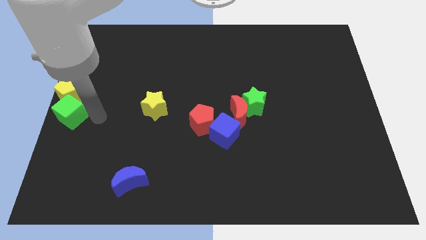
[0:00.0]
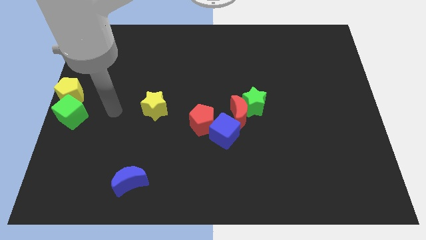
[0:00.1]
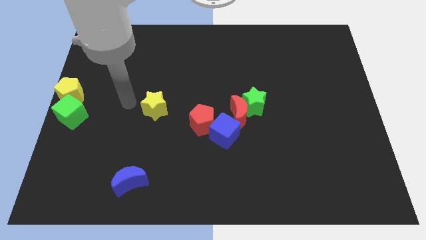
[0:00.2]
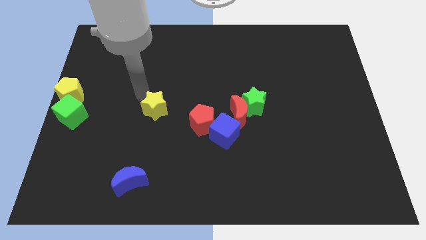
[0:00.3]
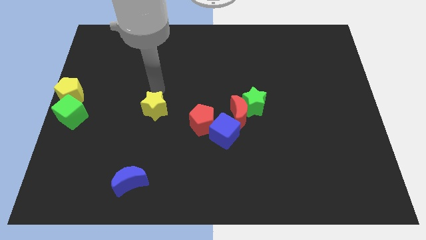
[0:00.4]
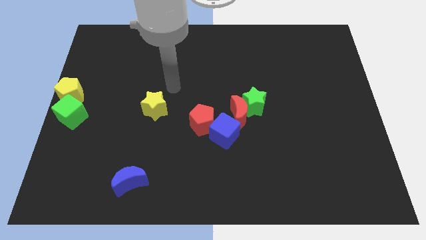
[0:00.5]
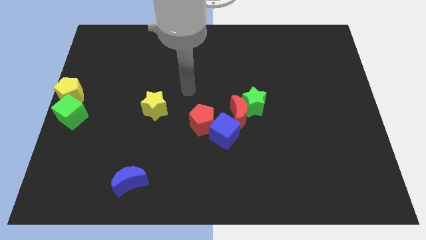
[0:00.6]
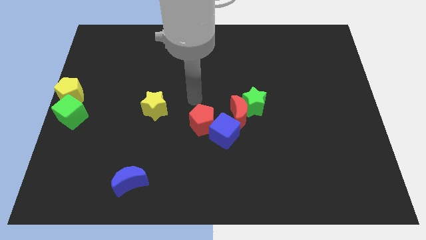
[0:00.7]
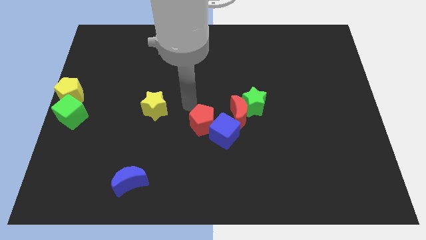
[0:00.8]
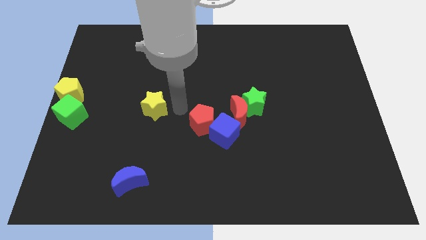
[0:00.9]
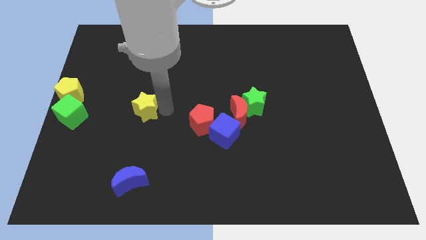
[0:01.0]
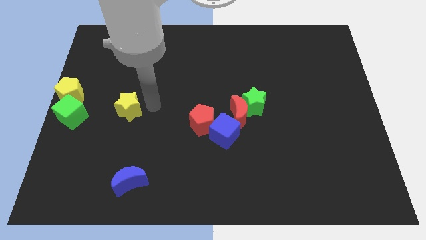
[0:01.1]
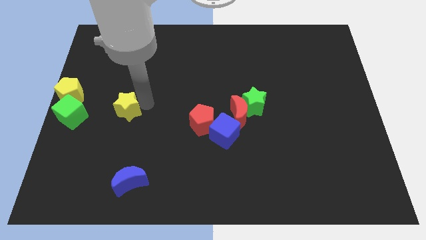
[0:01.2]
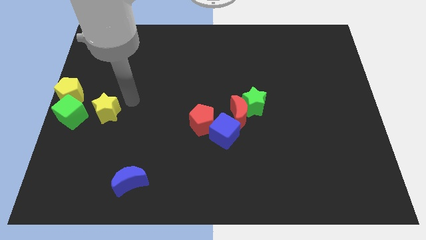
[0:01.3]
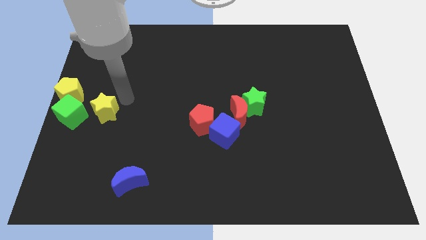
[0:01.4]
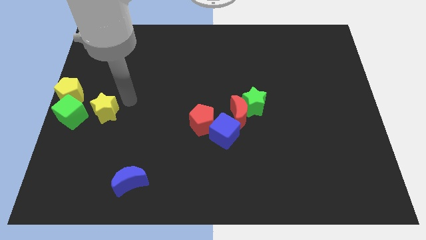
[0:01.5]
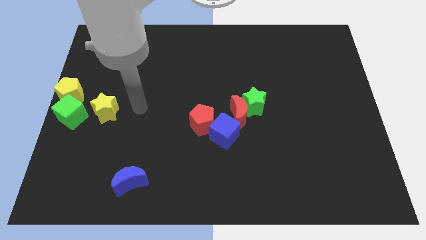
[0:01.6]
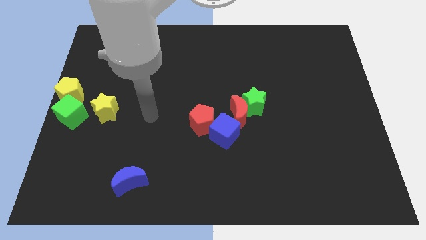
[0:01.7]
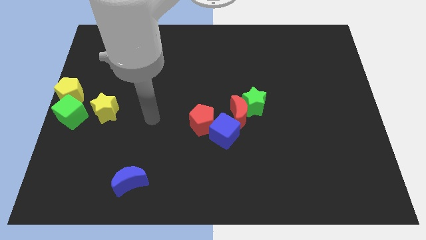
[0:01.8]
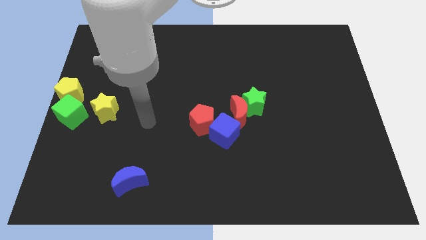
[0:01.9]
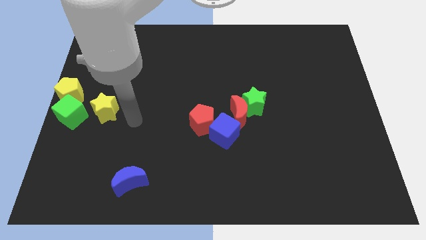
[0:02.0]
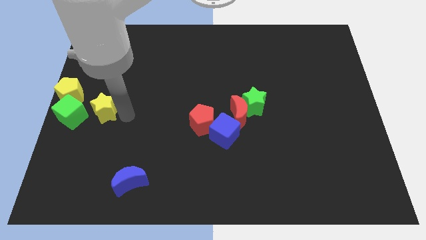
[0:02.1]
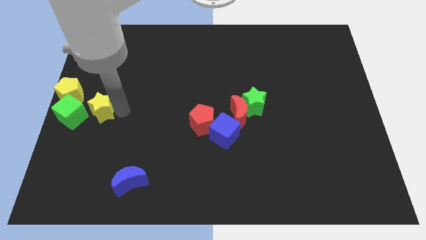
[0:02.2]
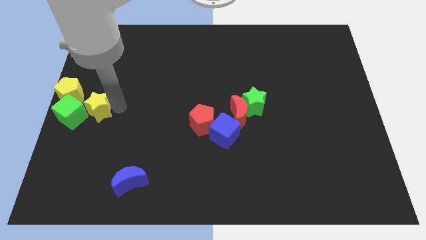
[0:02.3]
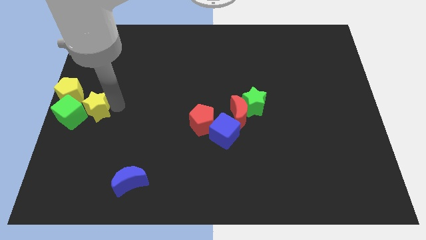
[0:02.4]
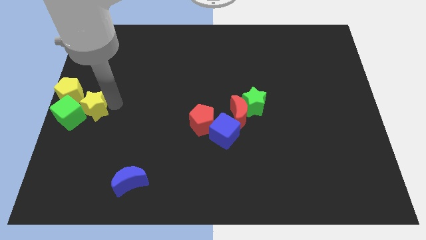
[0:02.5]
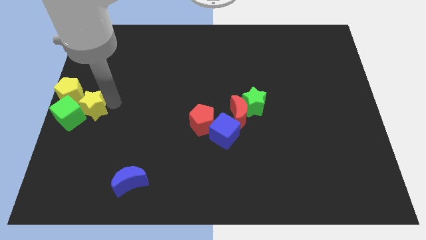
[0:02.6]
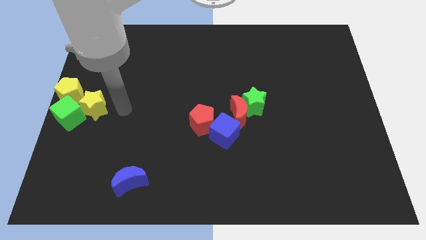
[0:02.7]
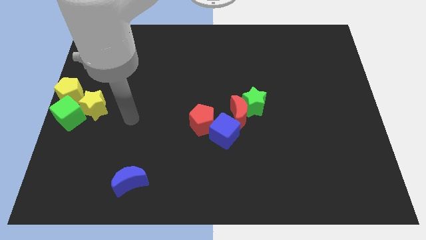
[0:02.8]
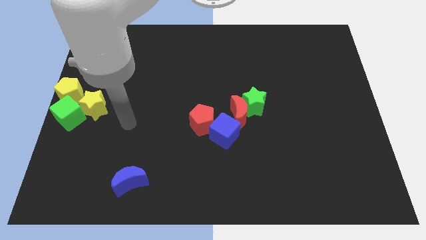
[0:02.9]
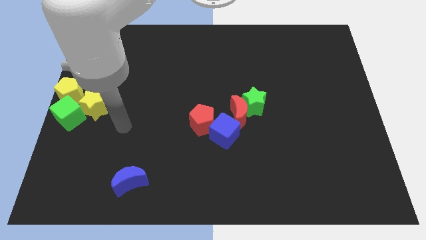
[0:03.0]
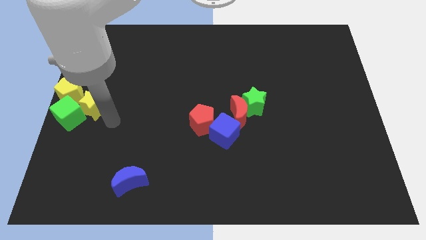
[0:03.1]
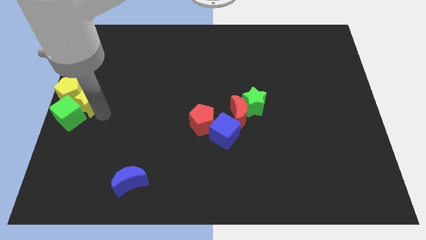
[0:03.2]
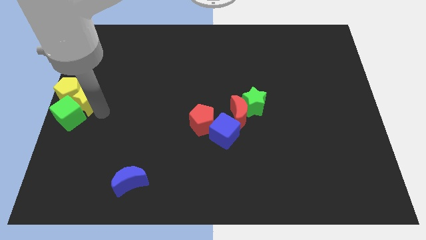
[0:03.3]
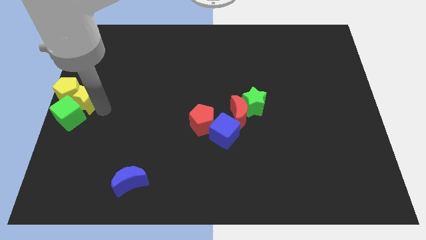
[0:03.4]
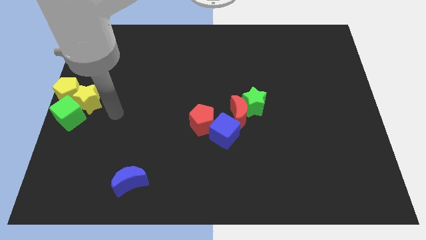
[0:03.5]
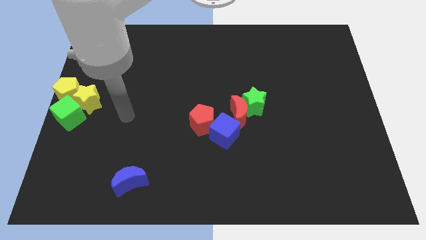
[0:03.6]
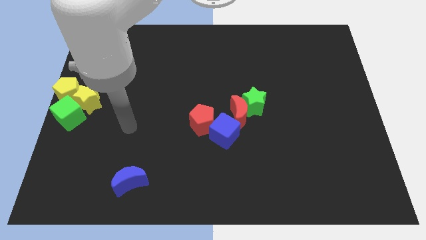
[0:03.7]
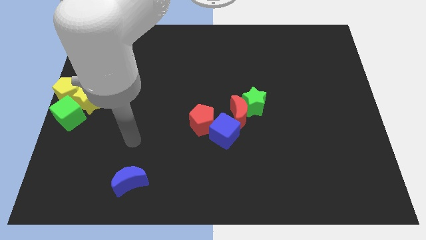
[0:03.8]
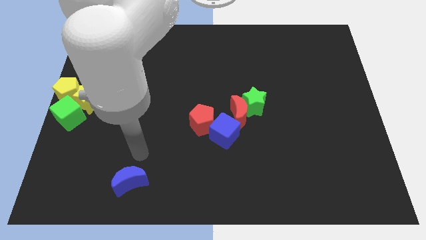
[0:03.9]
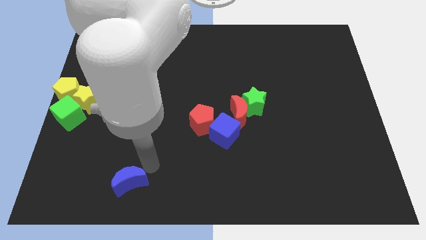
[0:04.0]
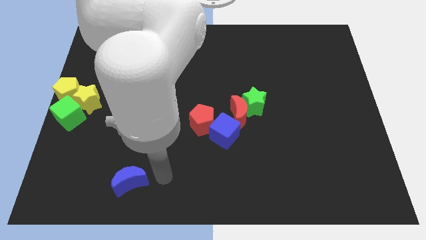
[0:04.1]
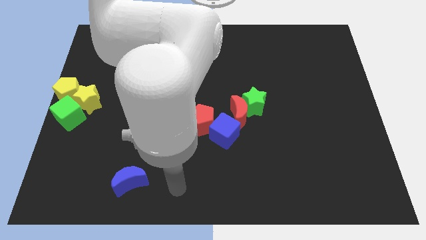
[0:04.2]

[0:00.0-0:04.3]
move the yellow star into the yellow pentagon

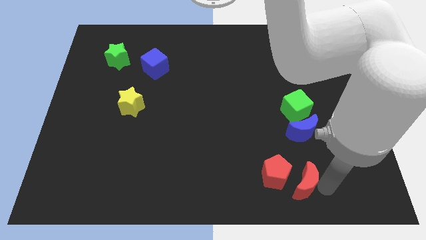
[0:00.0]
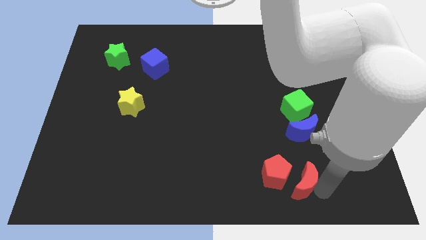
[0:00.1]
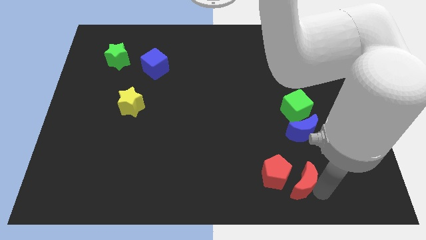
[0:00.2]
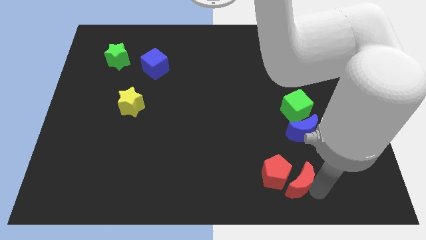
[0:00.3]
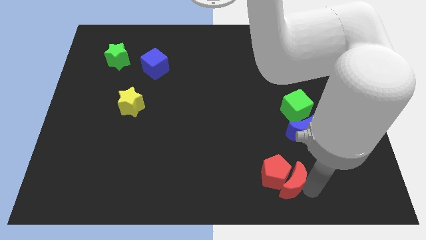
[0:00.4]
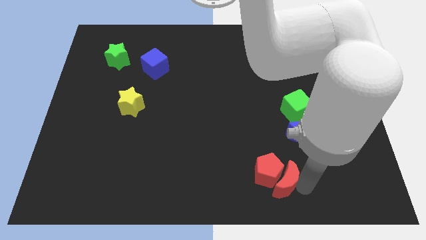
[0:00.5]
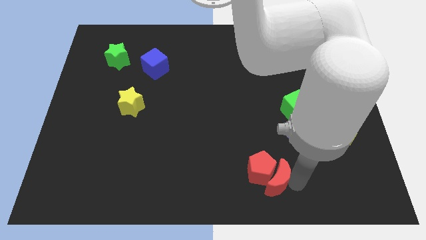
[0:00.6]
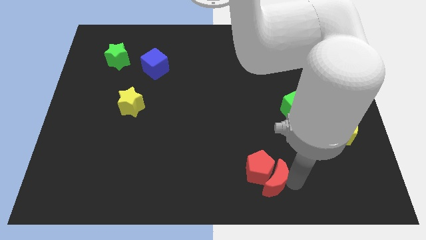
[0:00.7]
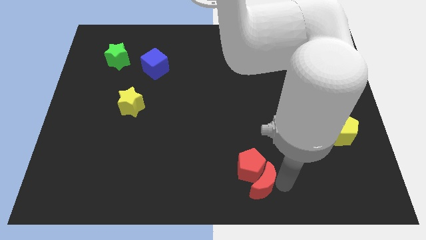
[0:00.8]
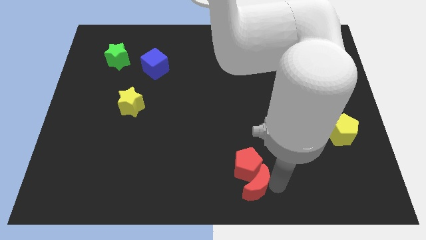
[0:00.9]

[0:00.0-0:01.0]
move the red crescent into the red pentagon

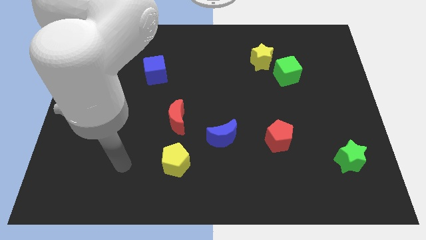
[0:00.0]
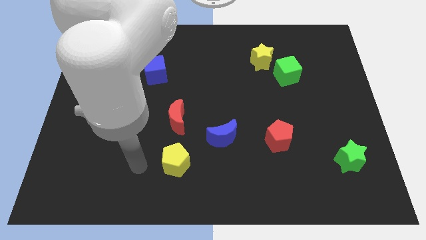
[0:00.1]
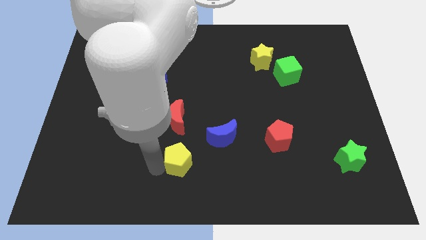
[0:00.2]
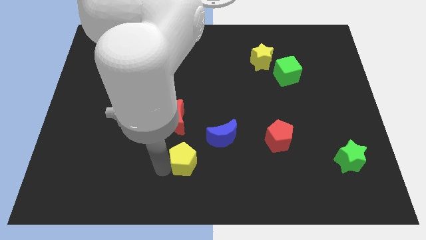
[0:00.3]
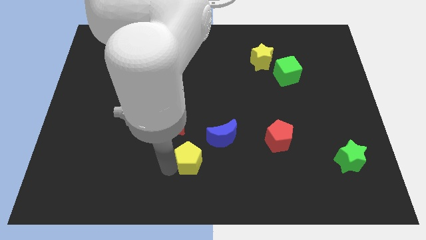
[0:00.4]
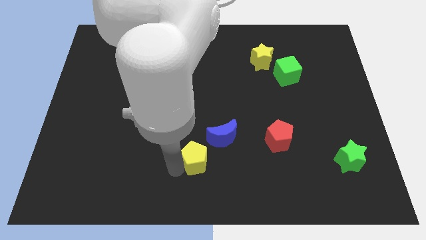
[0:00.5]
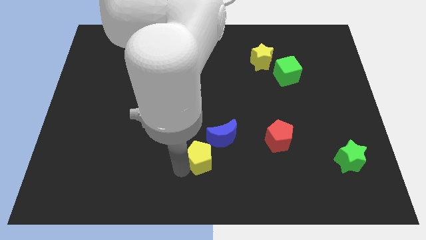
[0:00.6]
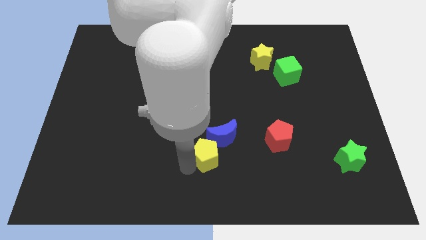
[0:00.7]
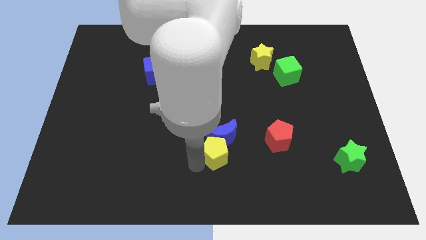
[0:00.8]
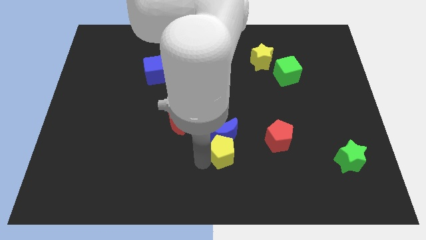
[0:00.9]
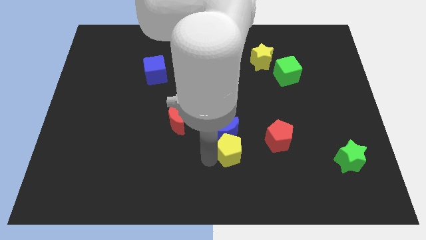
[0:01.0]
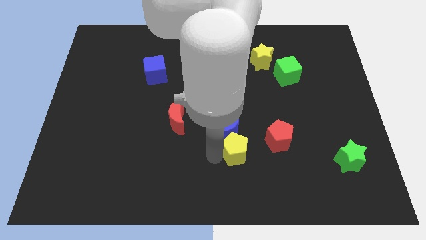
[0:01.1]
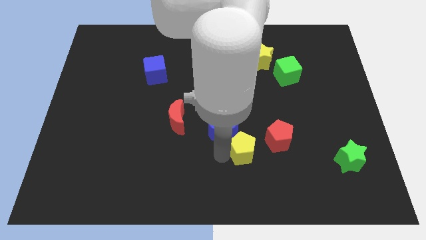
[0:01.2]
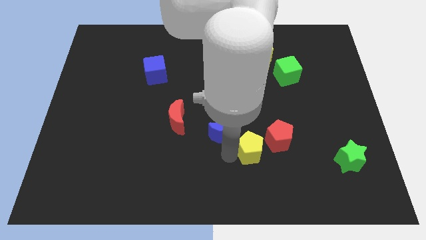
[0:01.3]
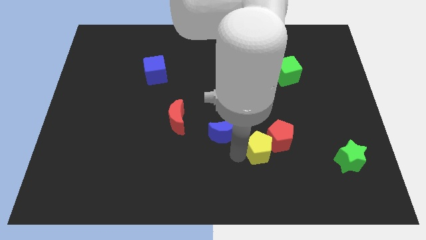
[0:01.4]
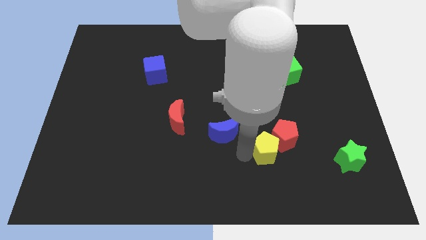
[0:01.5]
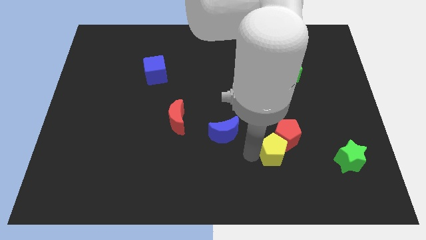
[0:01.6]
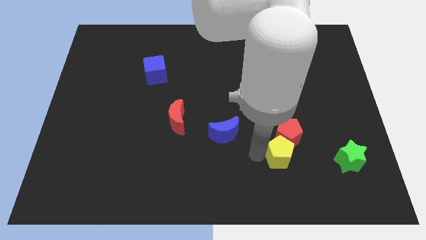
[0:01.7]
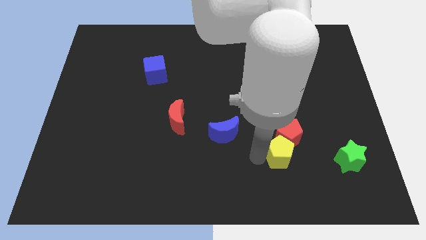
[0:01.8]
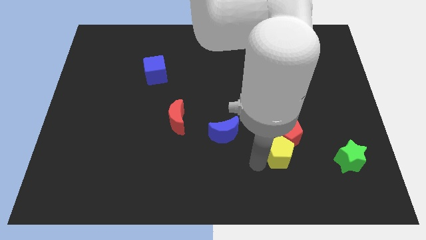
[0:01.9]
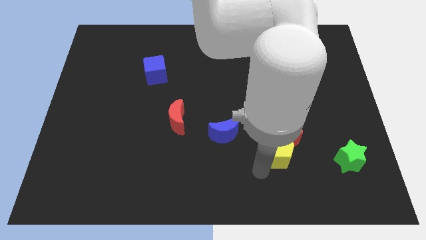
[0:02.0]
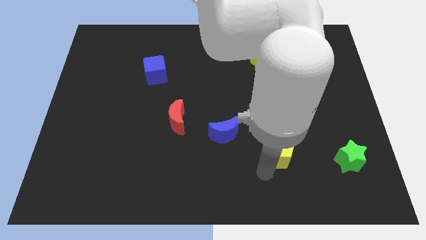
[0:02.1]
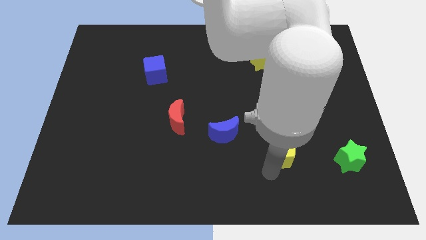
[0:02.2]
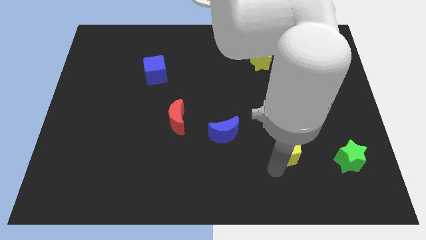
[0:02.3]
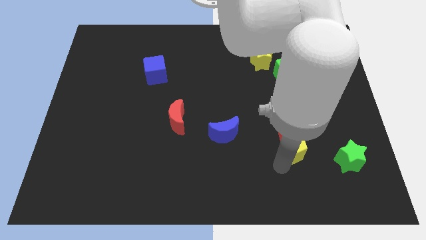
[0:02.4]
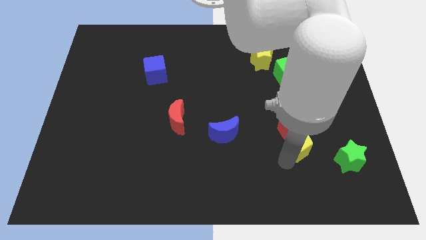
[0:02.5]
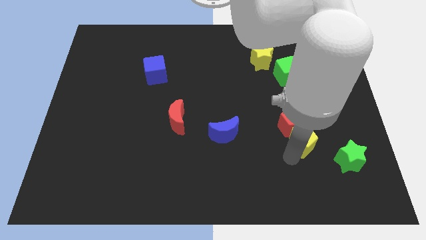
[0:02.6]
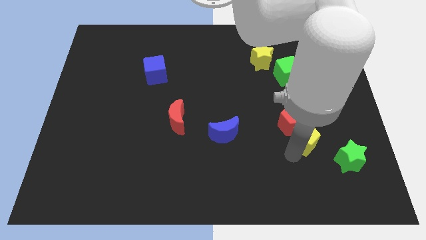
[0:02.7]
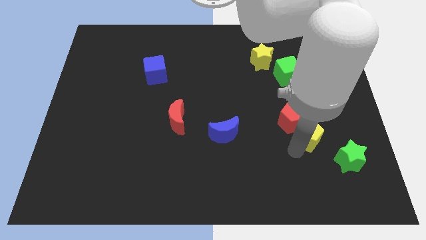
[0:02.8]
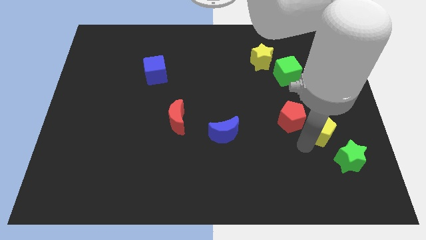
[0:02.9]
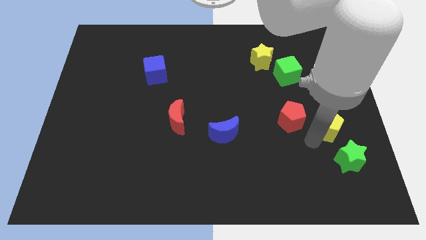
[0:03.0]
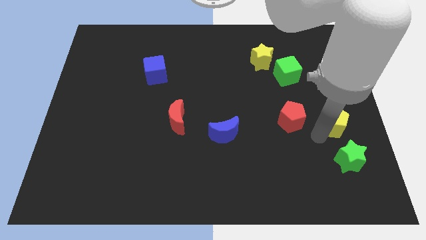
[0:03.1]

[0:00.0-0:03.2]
place the yellow pentagon top left to the green star

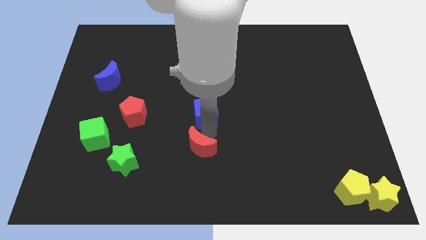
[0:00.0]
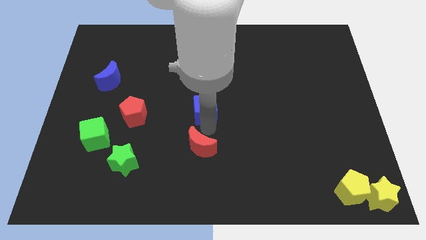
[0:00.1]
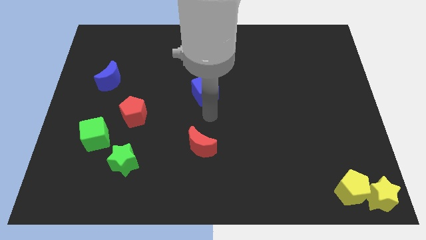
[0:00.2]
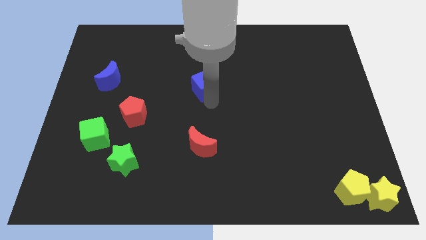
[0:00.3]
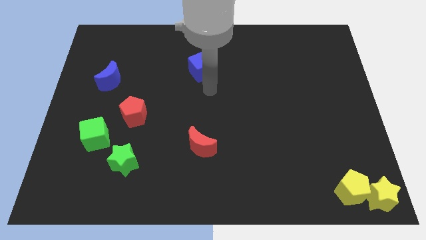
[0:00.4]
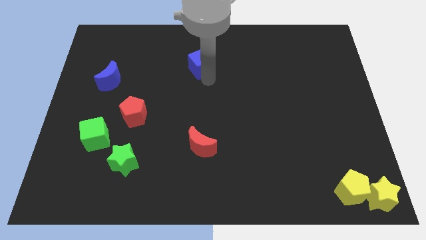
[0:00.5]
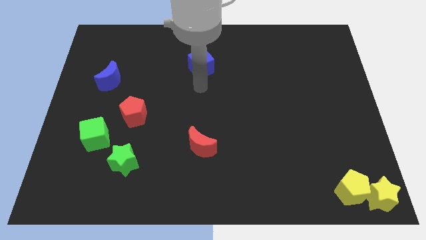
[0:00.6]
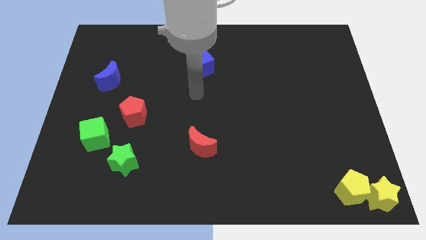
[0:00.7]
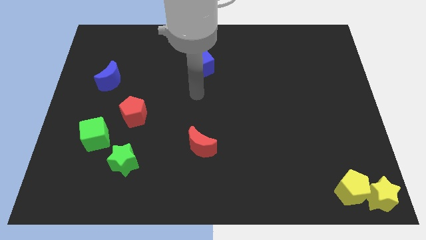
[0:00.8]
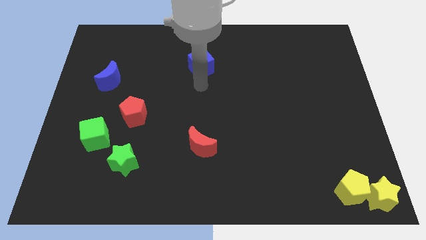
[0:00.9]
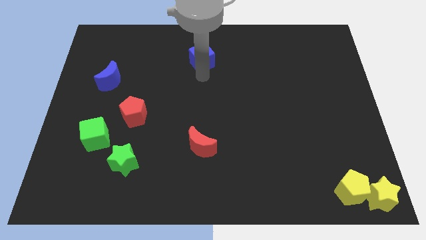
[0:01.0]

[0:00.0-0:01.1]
drag the blue cube towards the top center
